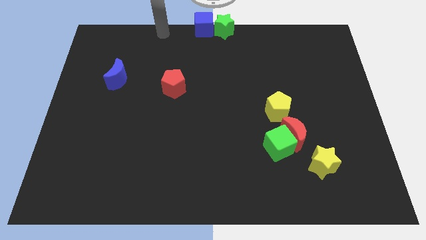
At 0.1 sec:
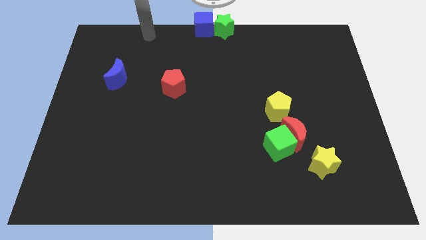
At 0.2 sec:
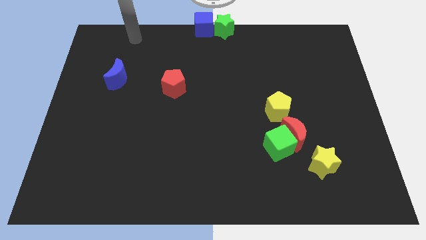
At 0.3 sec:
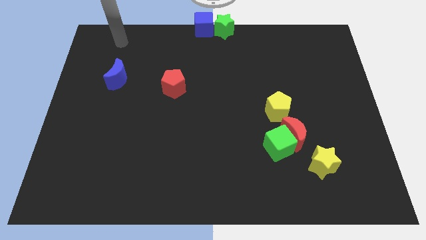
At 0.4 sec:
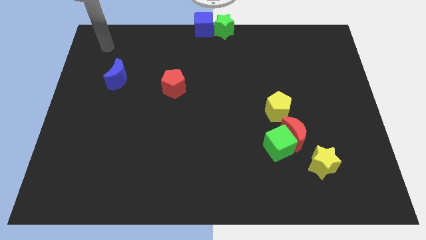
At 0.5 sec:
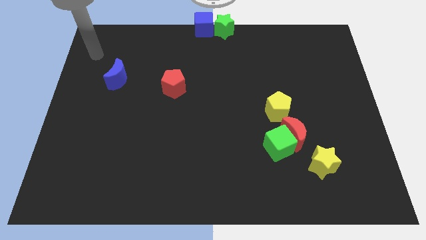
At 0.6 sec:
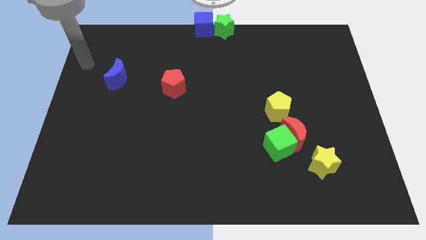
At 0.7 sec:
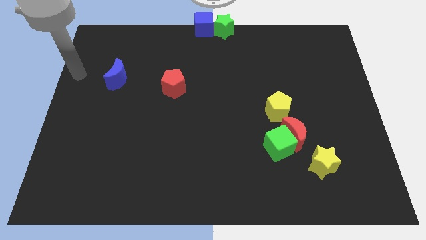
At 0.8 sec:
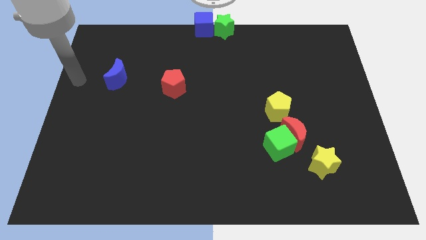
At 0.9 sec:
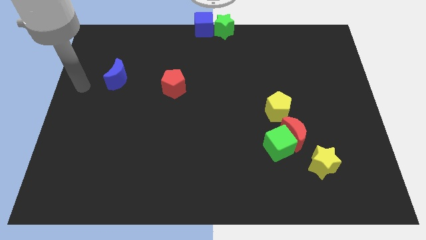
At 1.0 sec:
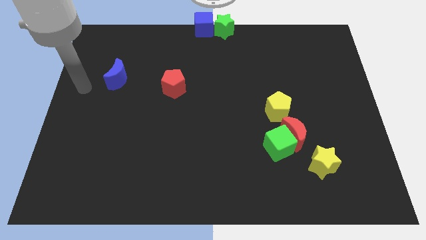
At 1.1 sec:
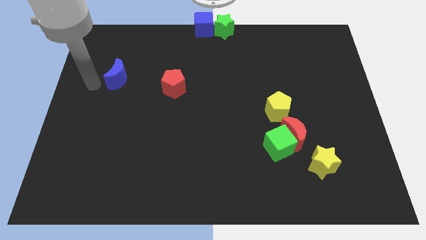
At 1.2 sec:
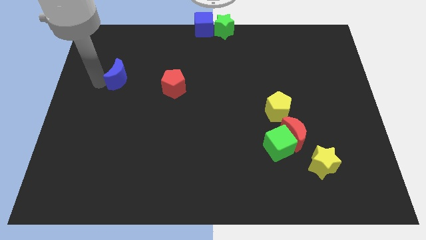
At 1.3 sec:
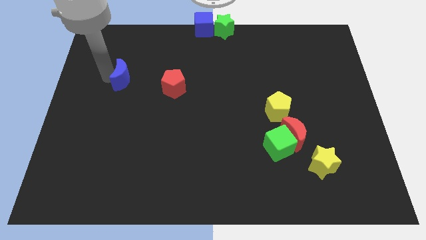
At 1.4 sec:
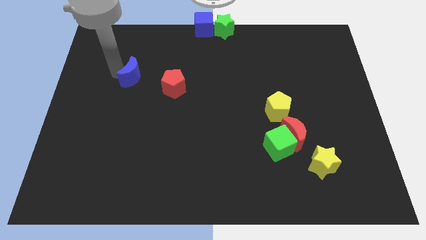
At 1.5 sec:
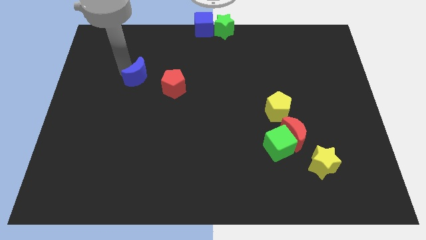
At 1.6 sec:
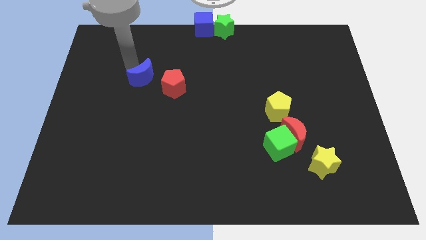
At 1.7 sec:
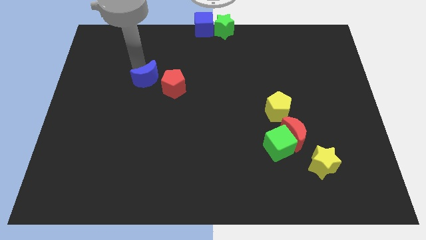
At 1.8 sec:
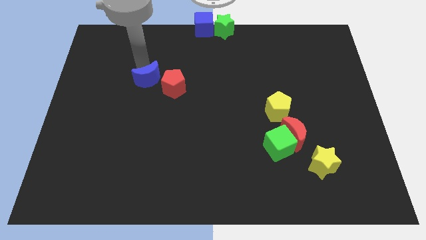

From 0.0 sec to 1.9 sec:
drag the blue crescent towards the red pentagon

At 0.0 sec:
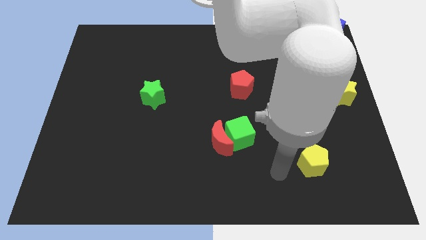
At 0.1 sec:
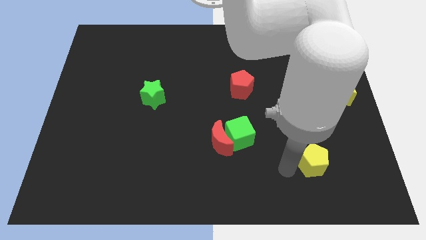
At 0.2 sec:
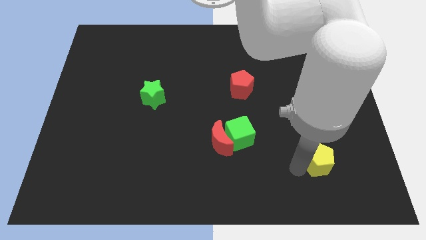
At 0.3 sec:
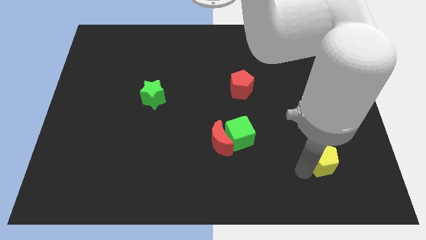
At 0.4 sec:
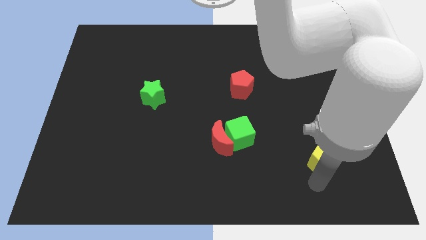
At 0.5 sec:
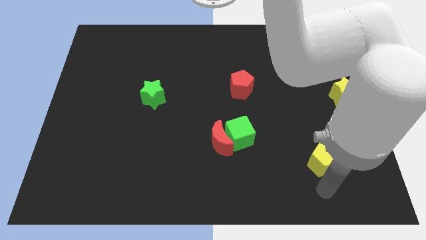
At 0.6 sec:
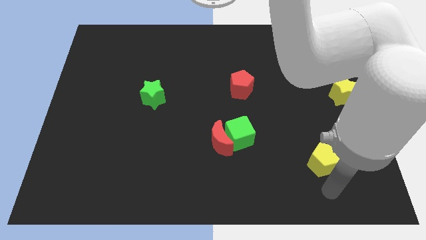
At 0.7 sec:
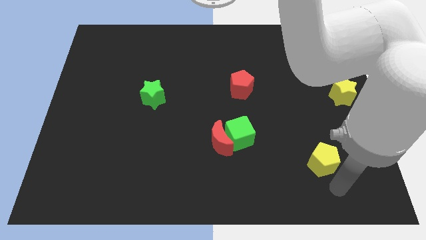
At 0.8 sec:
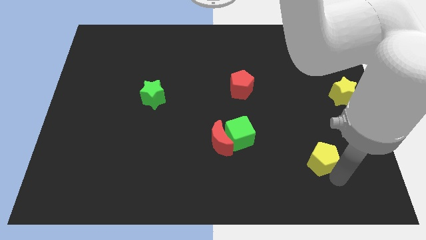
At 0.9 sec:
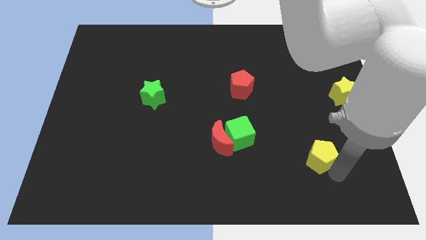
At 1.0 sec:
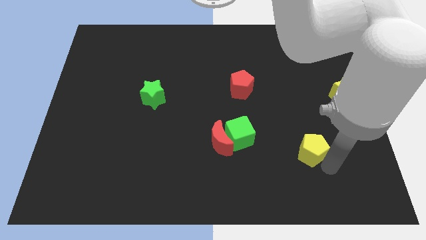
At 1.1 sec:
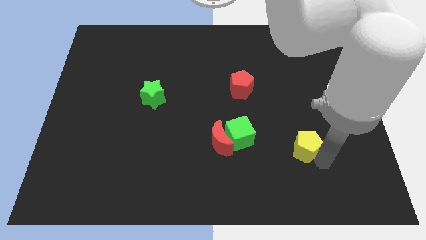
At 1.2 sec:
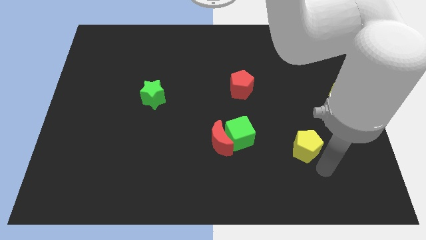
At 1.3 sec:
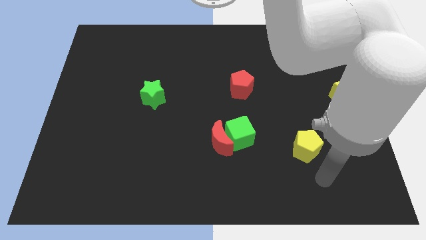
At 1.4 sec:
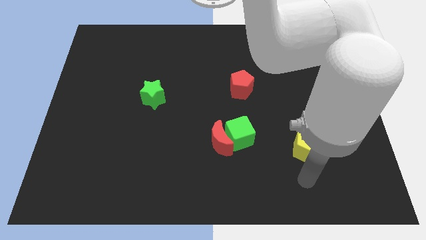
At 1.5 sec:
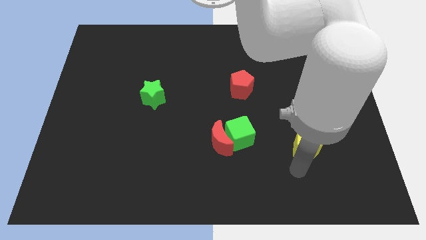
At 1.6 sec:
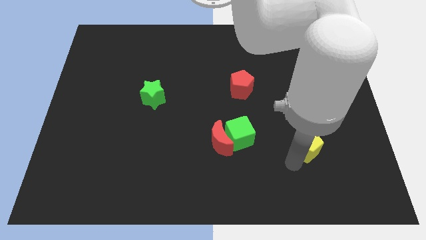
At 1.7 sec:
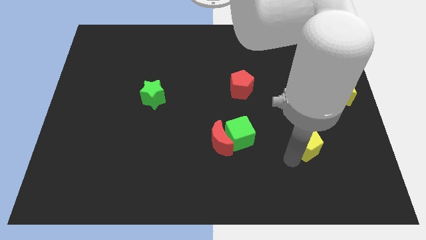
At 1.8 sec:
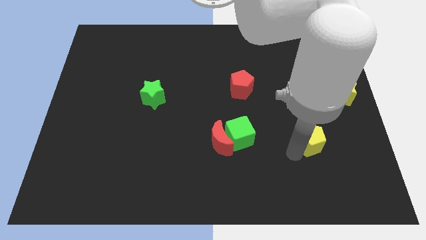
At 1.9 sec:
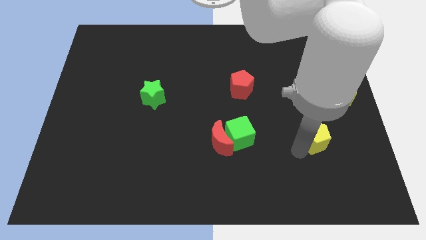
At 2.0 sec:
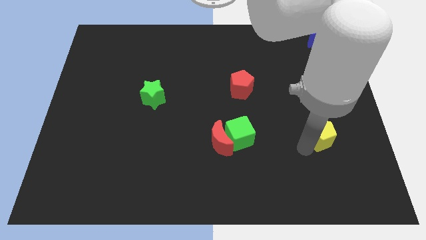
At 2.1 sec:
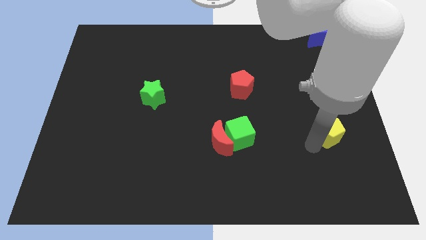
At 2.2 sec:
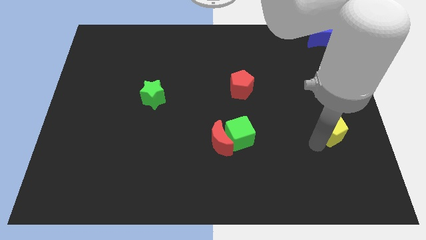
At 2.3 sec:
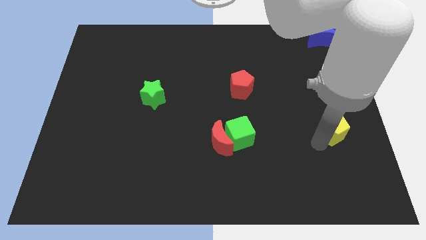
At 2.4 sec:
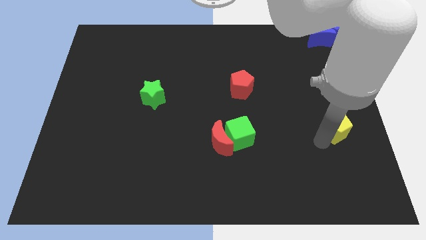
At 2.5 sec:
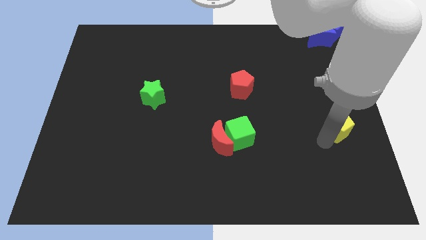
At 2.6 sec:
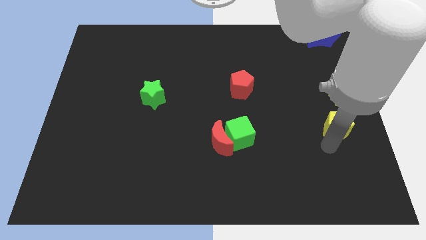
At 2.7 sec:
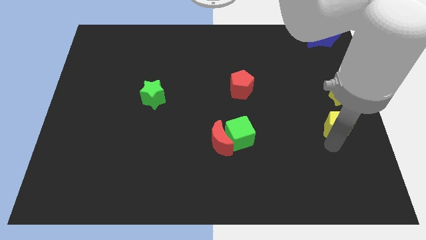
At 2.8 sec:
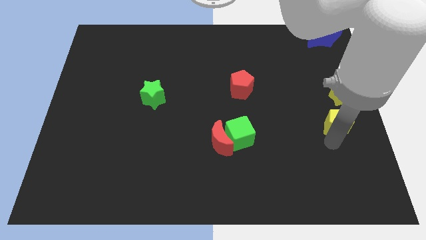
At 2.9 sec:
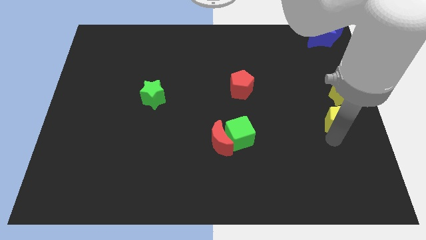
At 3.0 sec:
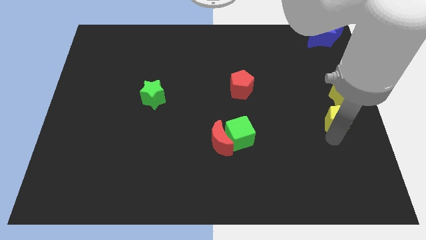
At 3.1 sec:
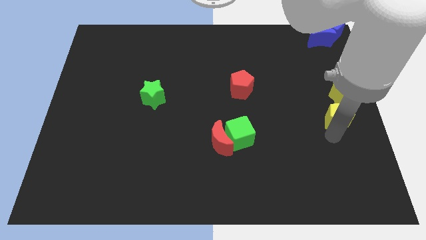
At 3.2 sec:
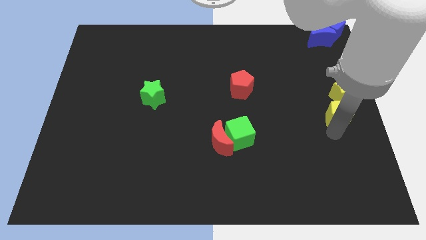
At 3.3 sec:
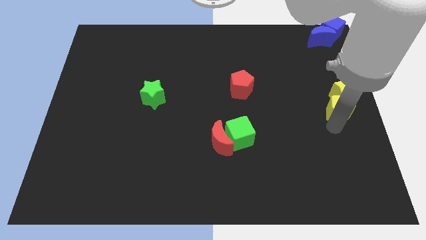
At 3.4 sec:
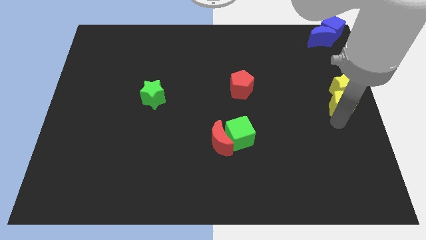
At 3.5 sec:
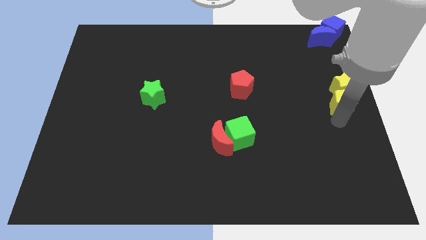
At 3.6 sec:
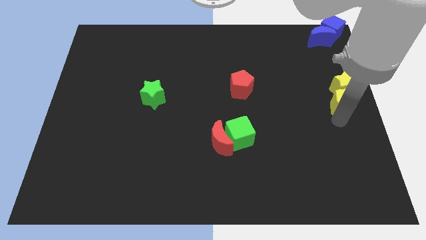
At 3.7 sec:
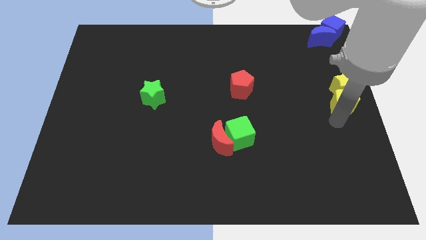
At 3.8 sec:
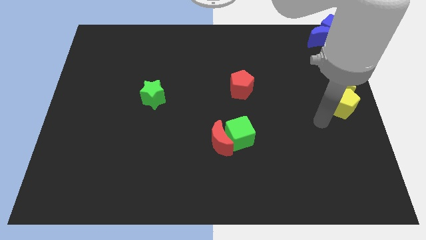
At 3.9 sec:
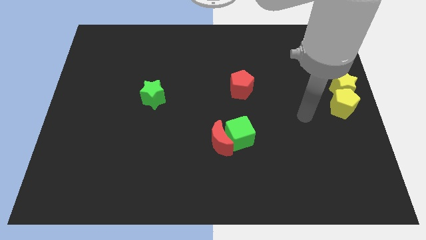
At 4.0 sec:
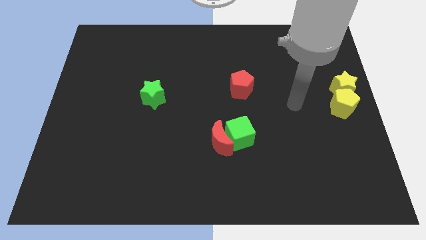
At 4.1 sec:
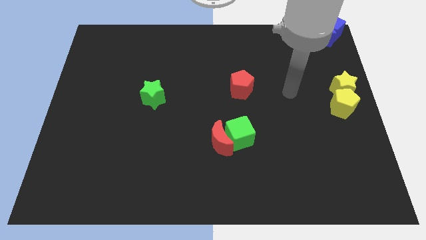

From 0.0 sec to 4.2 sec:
push the yellow pentagon into yellow star

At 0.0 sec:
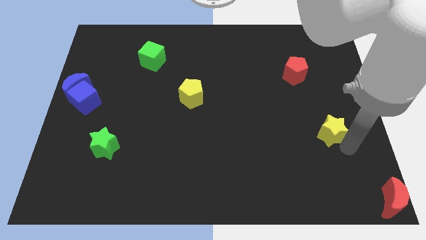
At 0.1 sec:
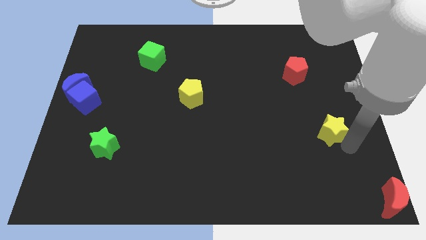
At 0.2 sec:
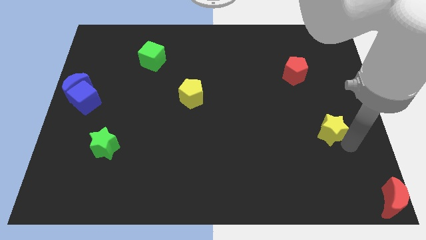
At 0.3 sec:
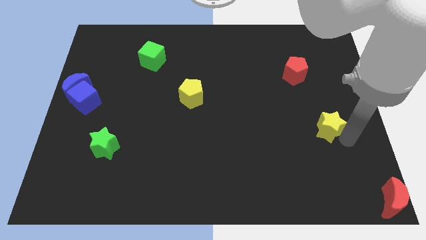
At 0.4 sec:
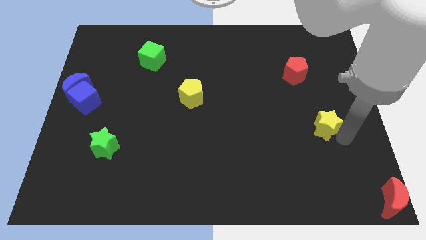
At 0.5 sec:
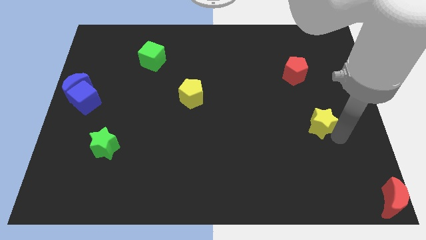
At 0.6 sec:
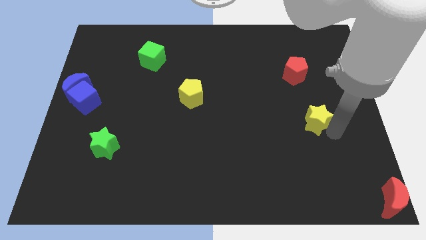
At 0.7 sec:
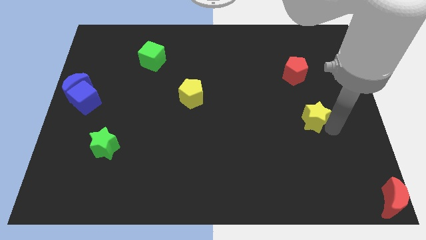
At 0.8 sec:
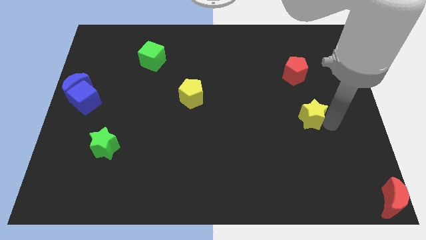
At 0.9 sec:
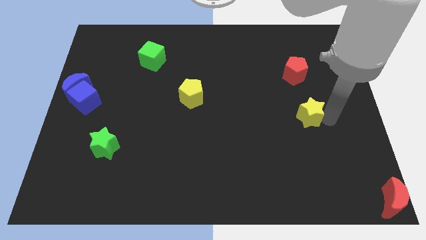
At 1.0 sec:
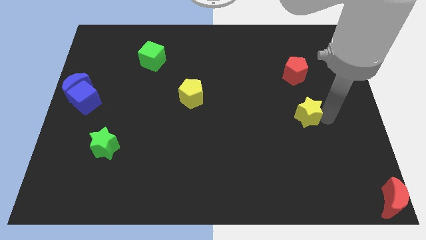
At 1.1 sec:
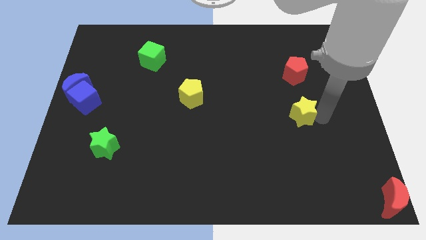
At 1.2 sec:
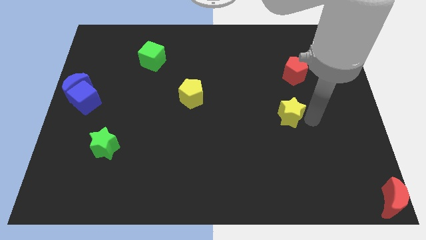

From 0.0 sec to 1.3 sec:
place the yellow star to the bottom of red pentagon

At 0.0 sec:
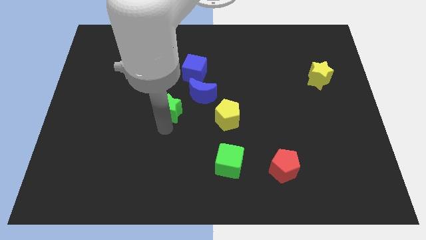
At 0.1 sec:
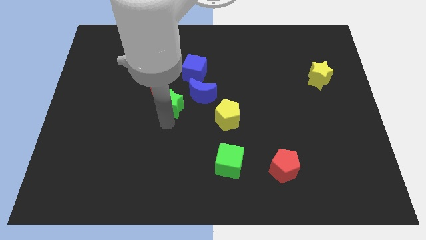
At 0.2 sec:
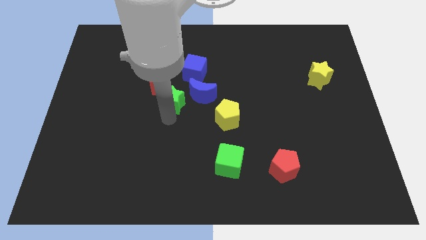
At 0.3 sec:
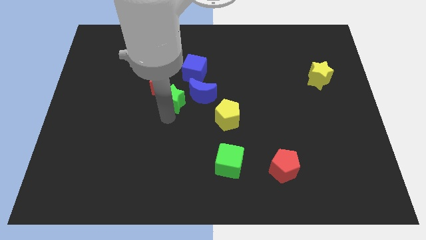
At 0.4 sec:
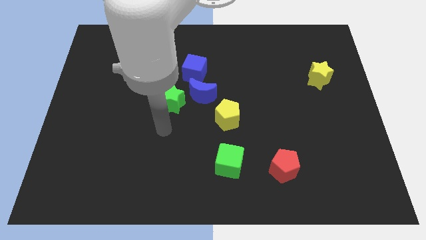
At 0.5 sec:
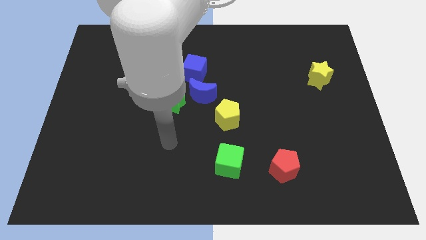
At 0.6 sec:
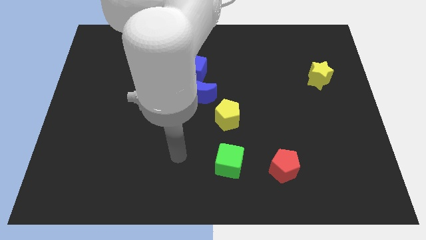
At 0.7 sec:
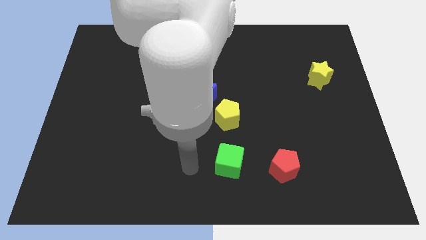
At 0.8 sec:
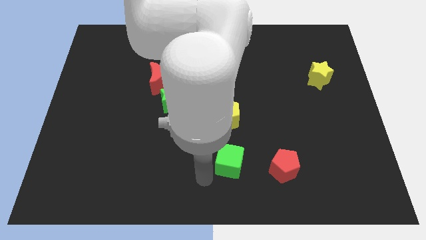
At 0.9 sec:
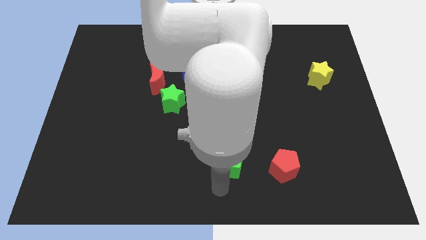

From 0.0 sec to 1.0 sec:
place the green star to the left of the blue moon

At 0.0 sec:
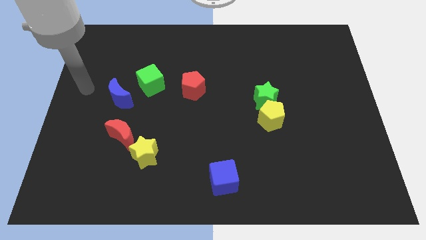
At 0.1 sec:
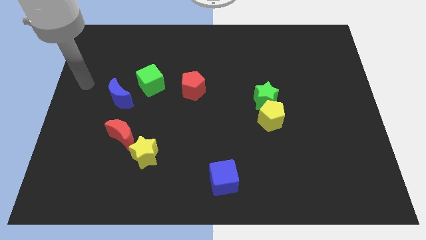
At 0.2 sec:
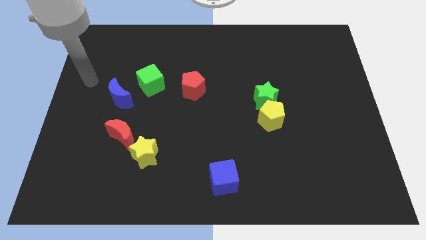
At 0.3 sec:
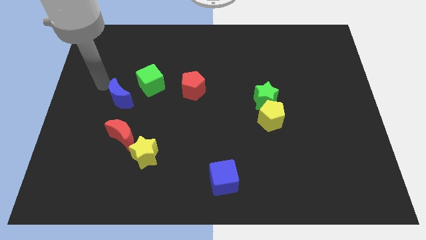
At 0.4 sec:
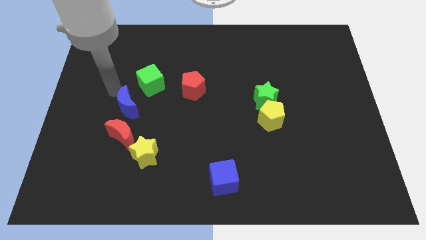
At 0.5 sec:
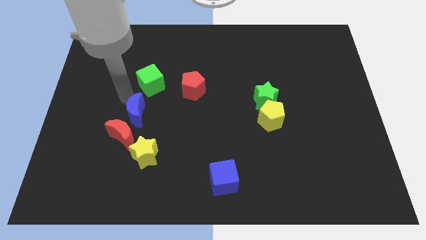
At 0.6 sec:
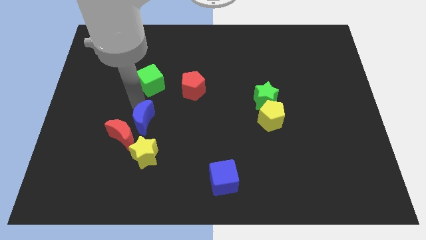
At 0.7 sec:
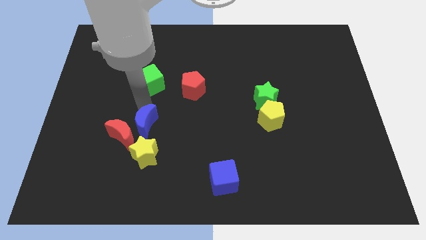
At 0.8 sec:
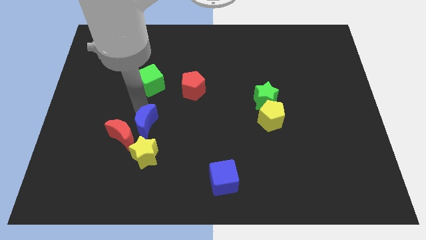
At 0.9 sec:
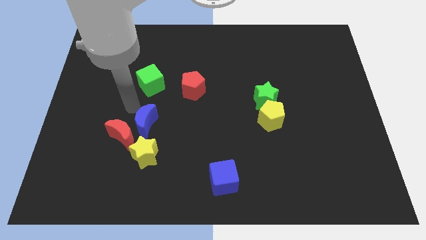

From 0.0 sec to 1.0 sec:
move the blue crescent to the top of the yellow star
